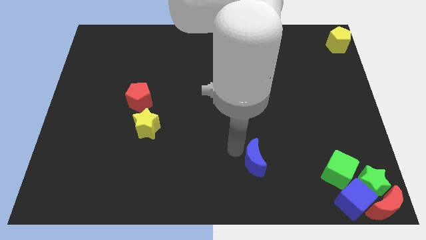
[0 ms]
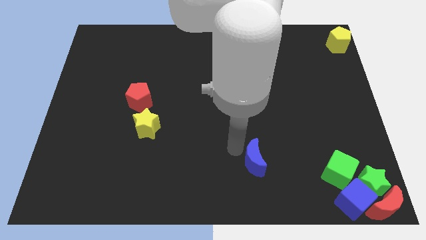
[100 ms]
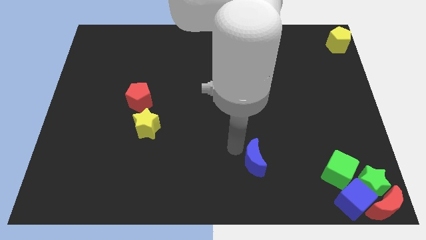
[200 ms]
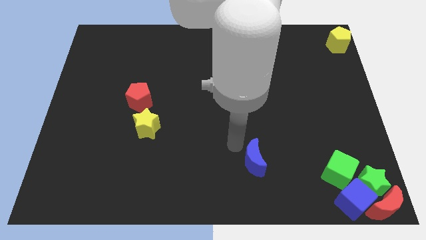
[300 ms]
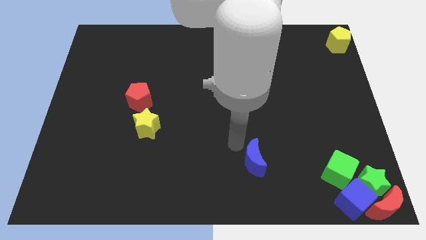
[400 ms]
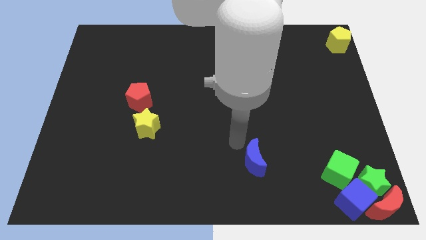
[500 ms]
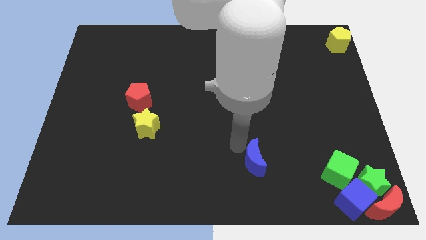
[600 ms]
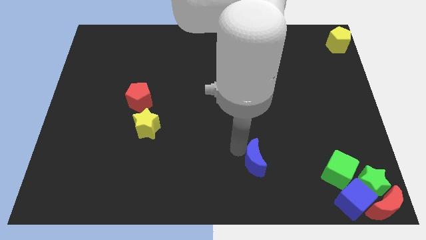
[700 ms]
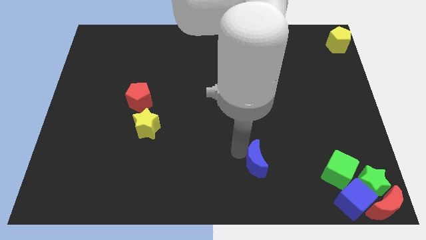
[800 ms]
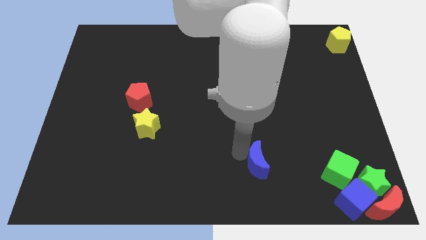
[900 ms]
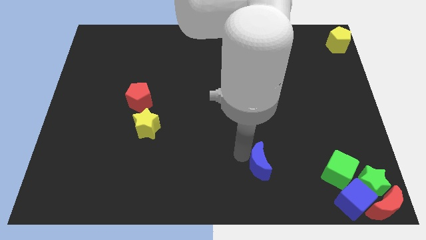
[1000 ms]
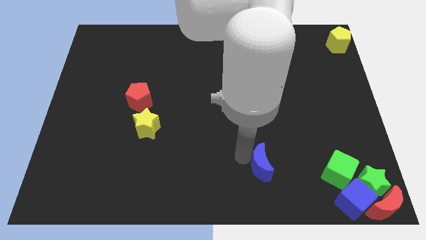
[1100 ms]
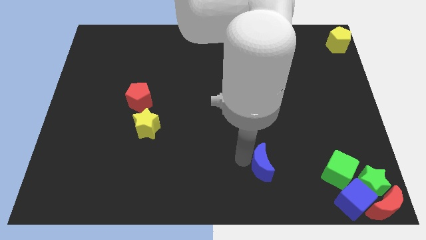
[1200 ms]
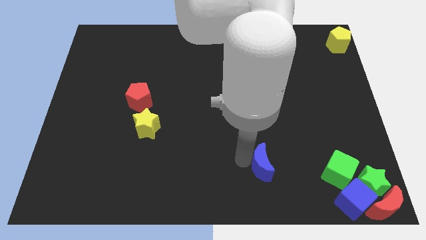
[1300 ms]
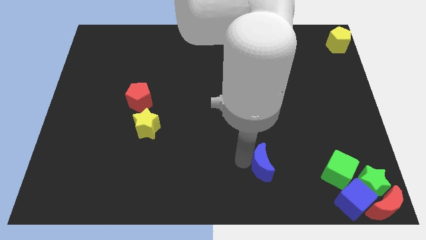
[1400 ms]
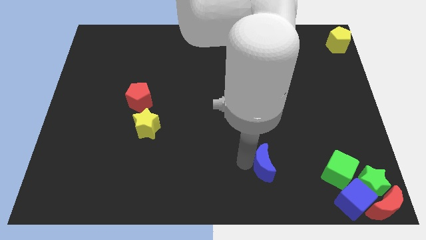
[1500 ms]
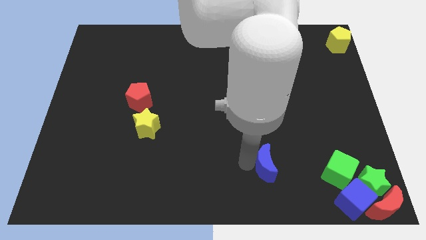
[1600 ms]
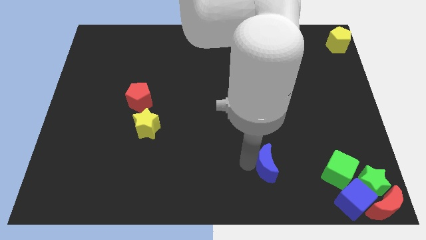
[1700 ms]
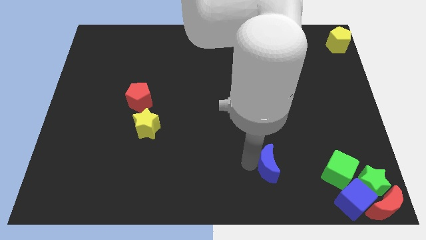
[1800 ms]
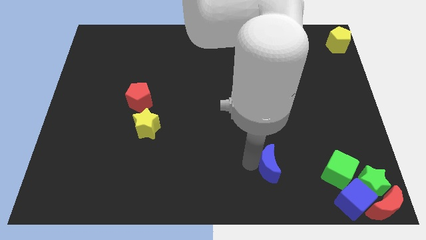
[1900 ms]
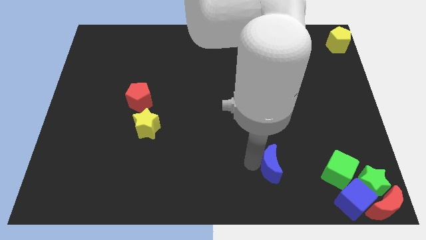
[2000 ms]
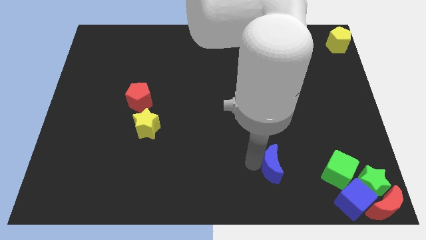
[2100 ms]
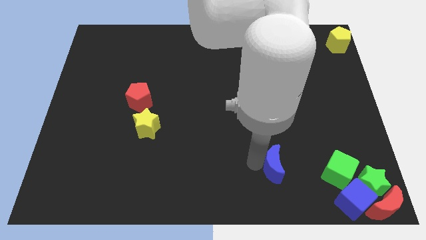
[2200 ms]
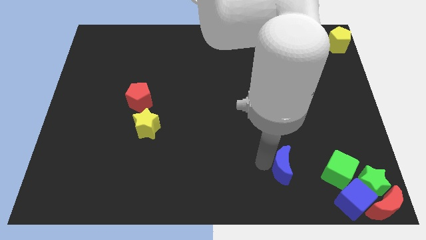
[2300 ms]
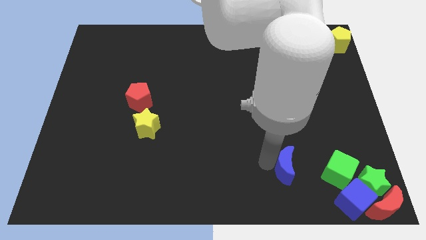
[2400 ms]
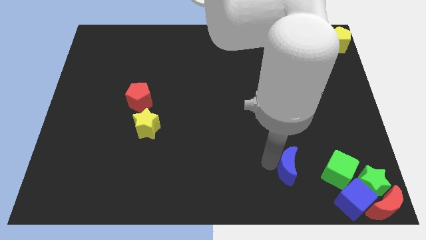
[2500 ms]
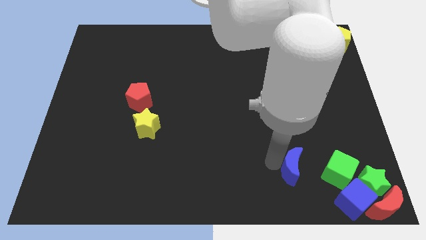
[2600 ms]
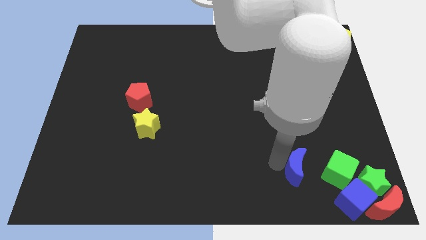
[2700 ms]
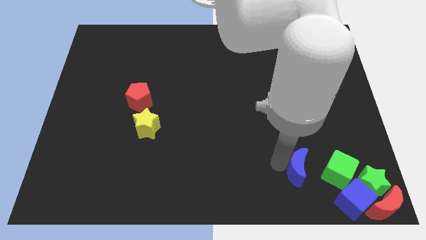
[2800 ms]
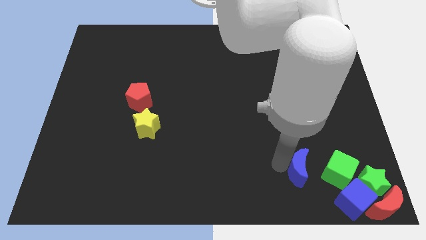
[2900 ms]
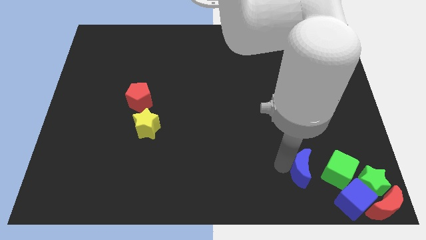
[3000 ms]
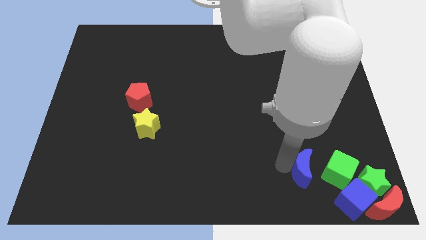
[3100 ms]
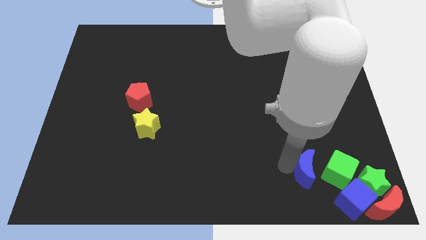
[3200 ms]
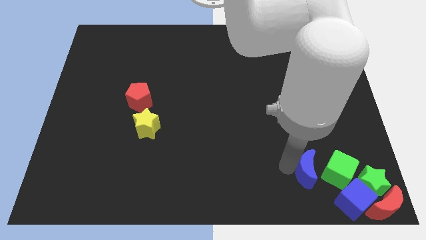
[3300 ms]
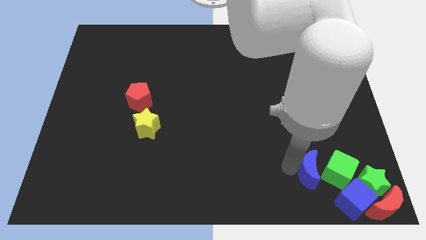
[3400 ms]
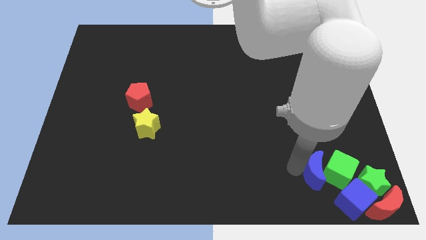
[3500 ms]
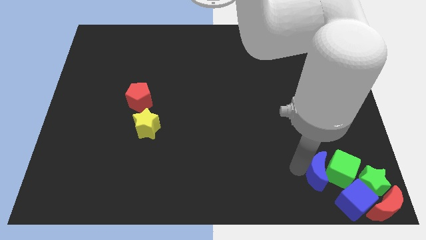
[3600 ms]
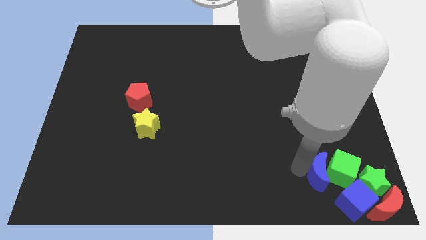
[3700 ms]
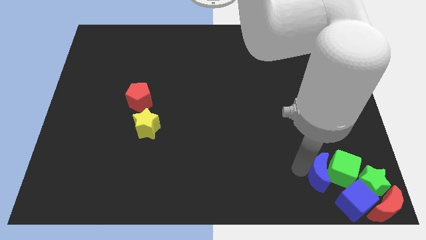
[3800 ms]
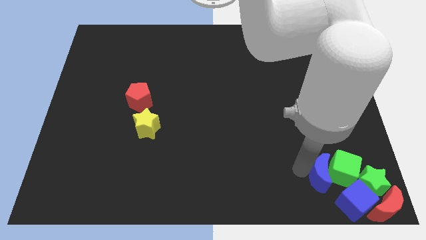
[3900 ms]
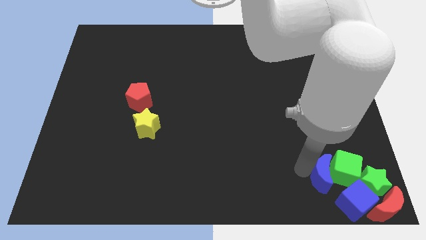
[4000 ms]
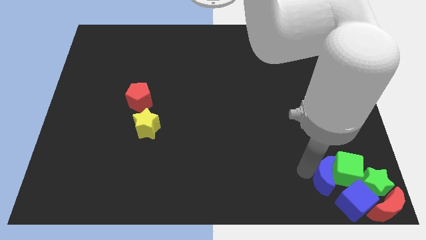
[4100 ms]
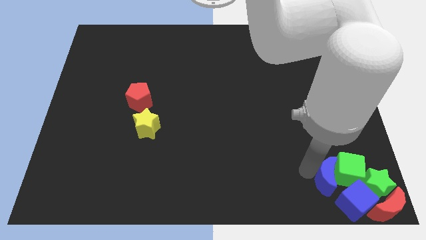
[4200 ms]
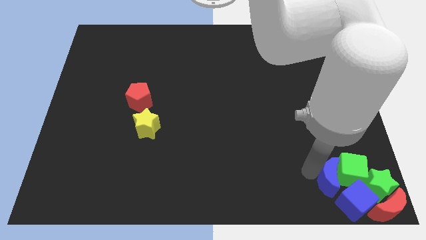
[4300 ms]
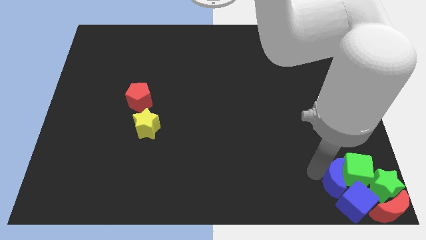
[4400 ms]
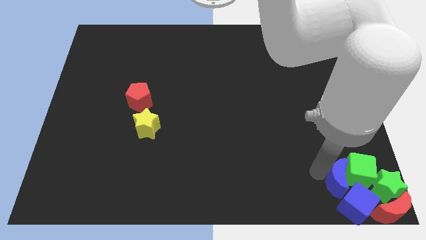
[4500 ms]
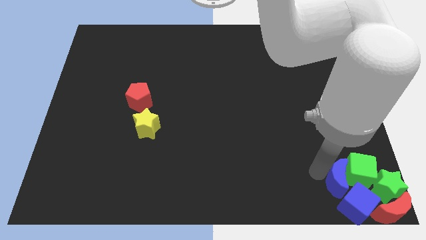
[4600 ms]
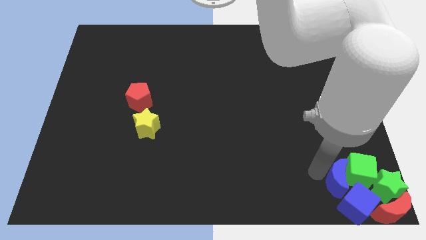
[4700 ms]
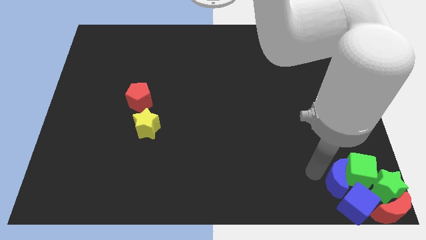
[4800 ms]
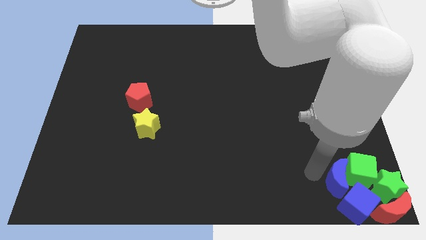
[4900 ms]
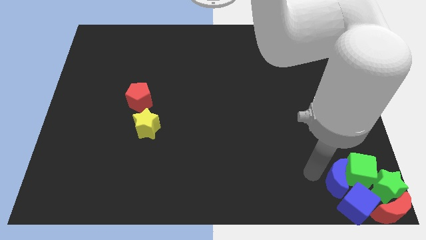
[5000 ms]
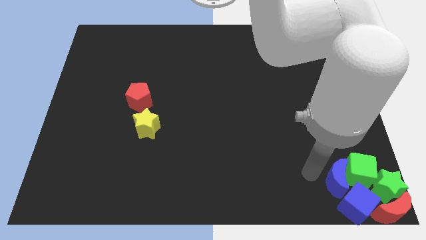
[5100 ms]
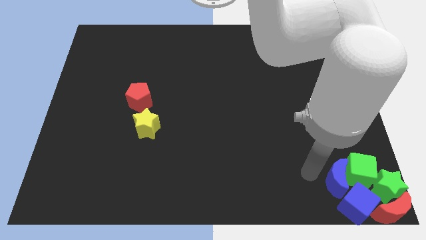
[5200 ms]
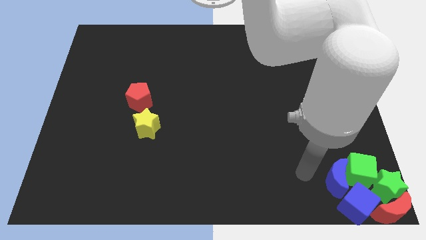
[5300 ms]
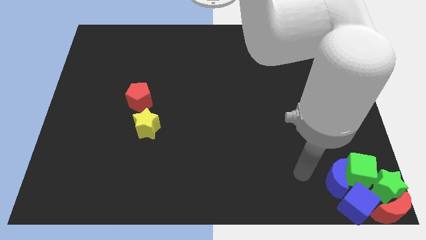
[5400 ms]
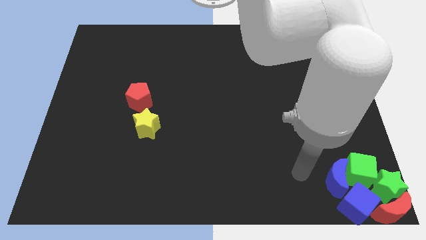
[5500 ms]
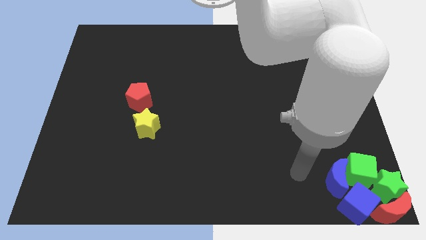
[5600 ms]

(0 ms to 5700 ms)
push the blue crescent into the green cube

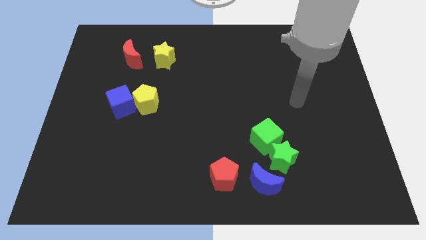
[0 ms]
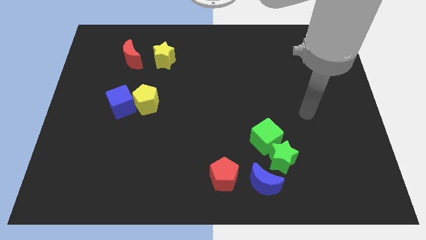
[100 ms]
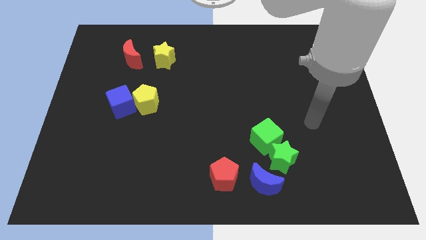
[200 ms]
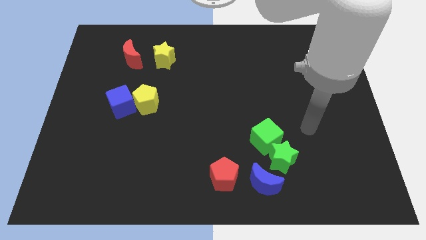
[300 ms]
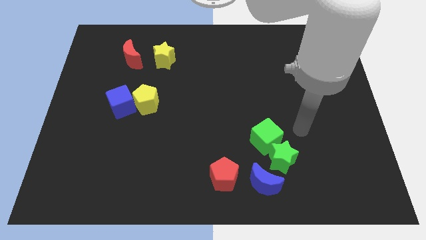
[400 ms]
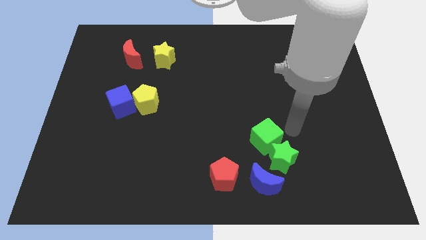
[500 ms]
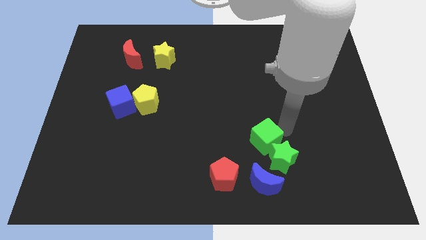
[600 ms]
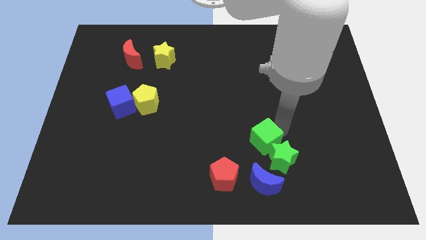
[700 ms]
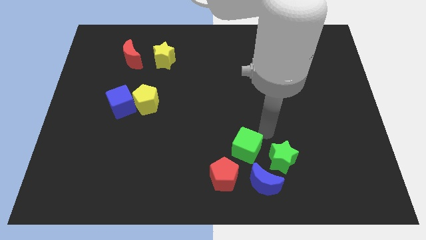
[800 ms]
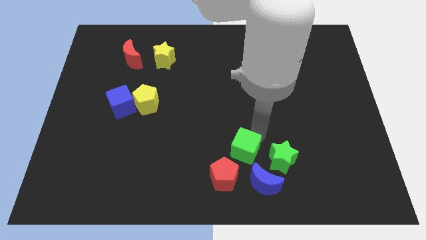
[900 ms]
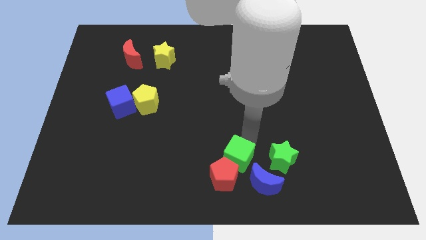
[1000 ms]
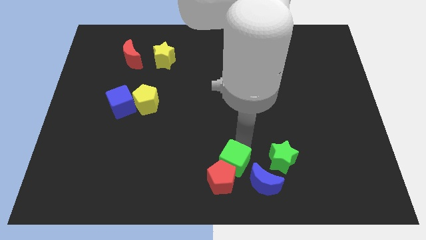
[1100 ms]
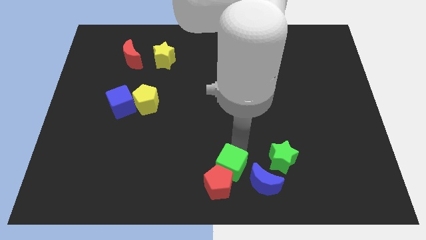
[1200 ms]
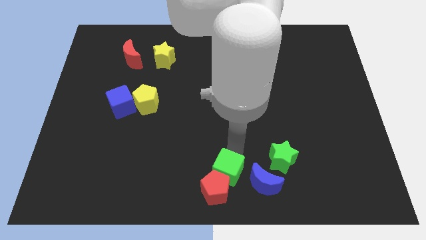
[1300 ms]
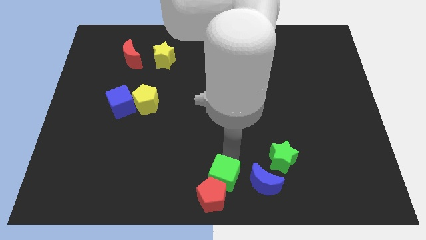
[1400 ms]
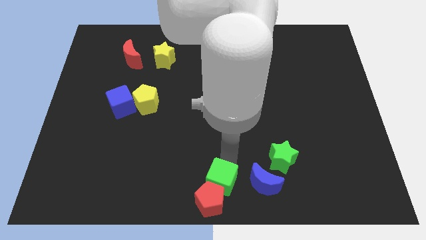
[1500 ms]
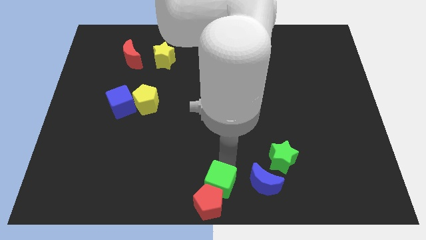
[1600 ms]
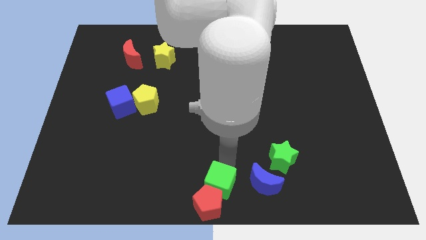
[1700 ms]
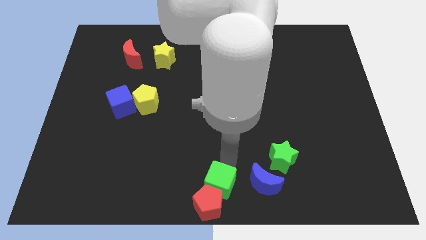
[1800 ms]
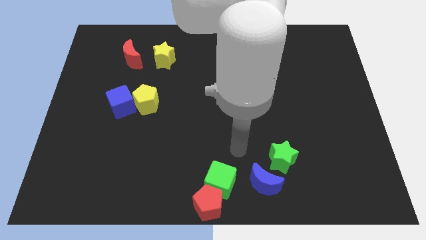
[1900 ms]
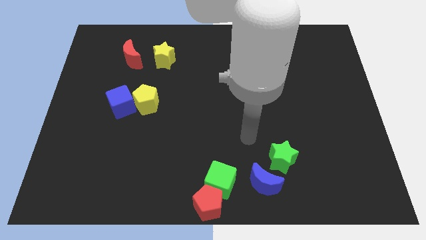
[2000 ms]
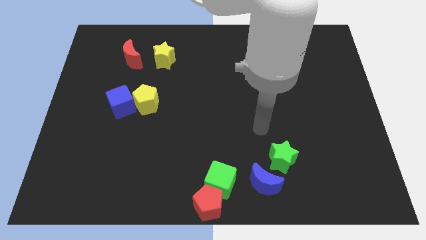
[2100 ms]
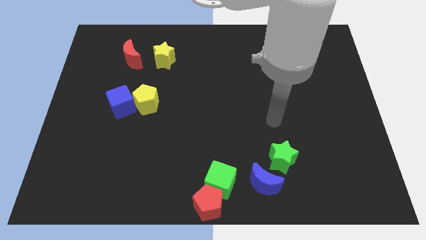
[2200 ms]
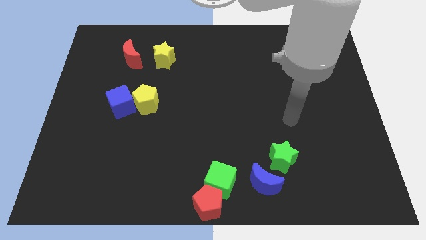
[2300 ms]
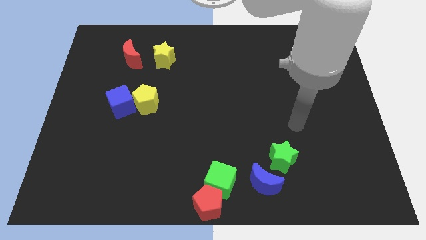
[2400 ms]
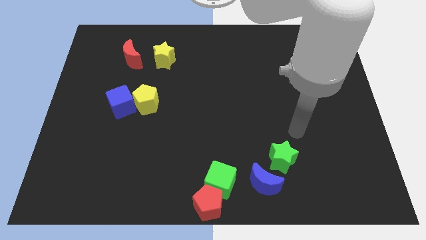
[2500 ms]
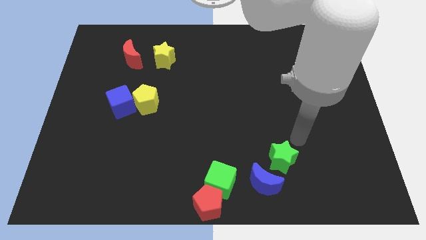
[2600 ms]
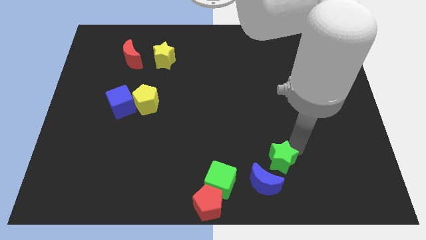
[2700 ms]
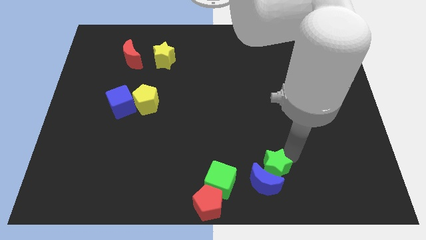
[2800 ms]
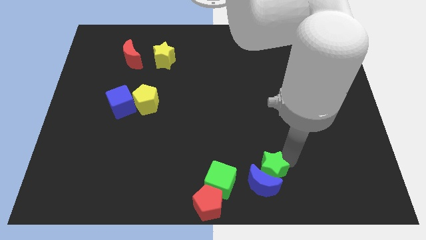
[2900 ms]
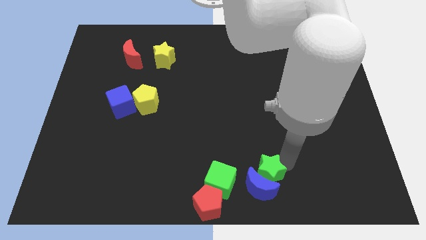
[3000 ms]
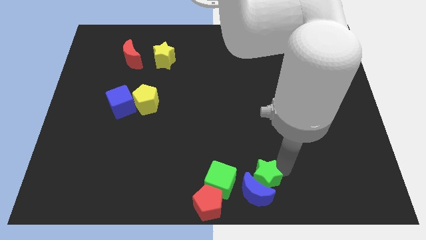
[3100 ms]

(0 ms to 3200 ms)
move the green cube and green star towards bottom center

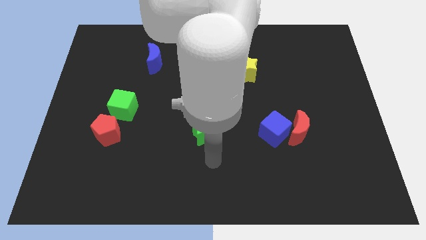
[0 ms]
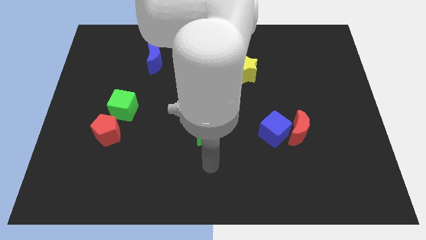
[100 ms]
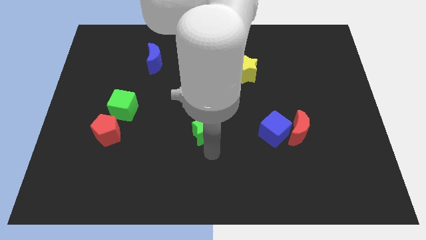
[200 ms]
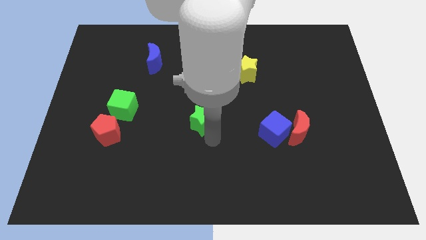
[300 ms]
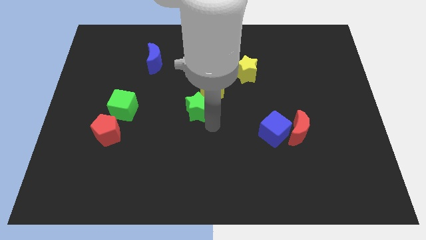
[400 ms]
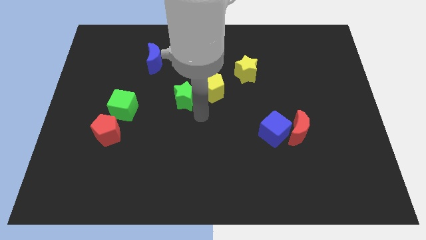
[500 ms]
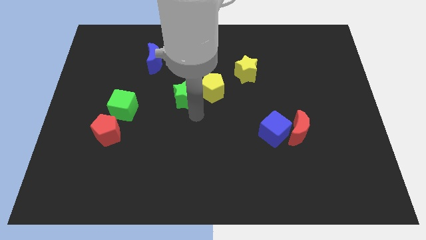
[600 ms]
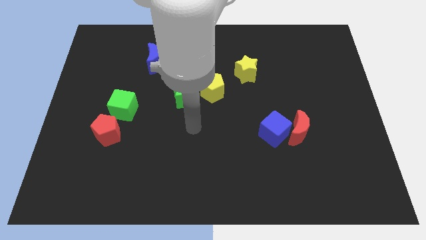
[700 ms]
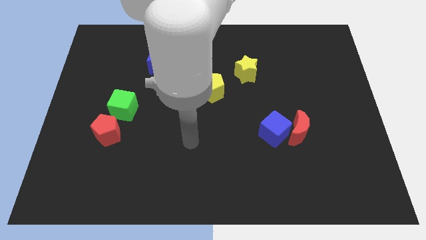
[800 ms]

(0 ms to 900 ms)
place green star beside yellow pentagon
